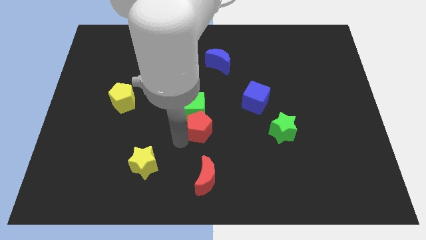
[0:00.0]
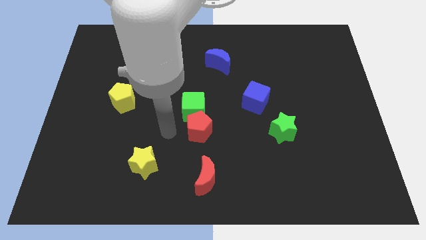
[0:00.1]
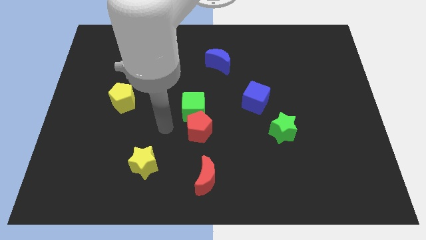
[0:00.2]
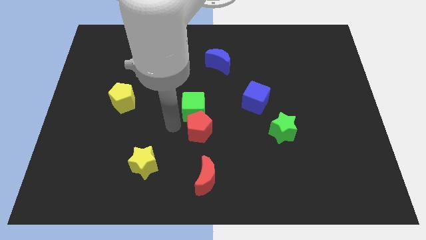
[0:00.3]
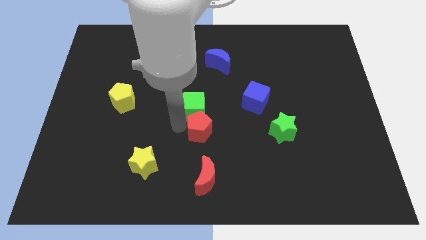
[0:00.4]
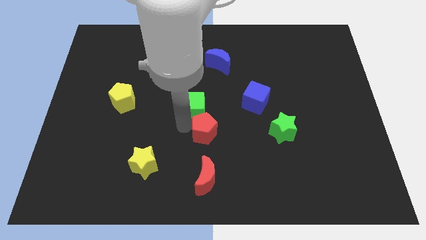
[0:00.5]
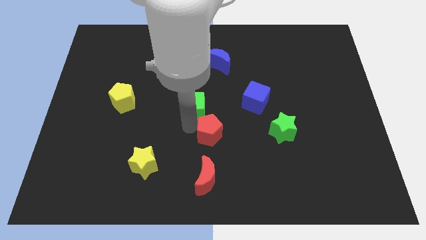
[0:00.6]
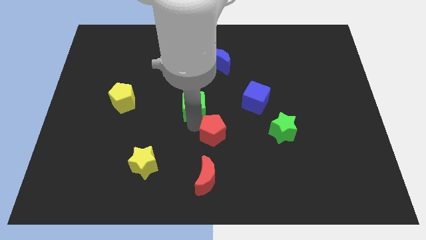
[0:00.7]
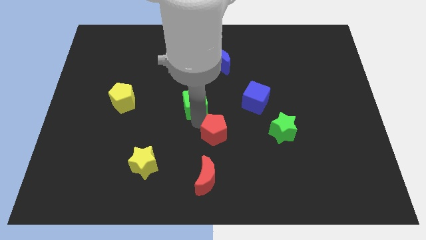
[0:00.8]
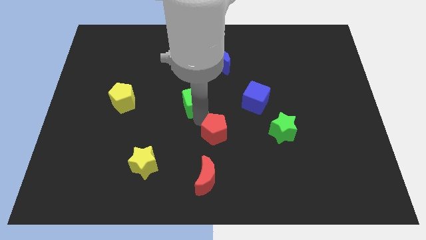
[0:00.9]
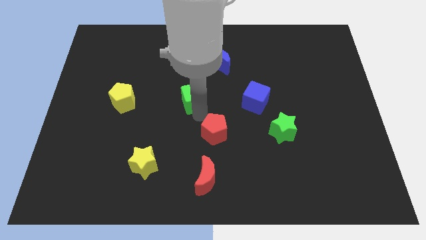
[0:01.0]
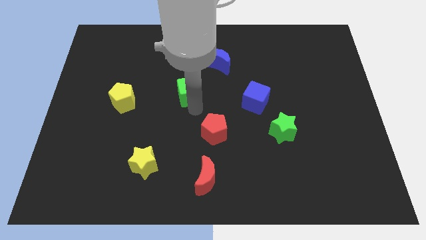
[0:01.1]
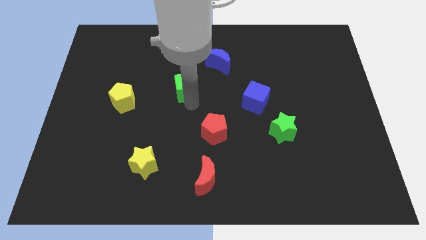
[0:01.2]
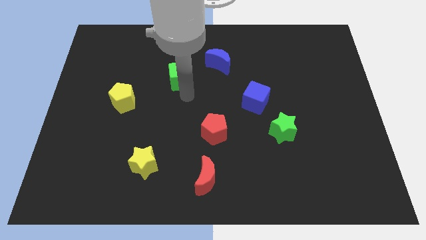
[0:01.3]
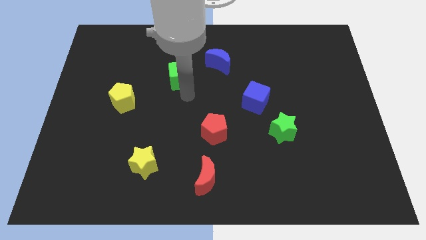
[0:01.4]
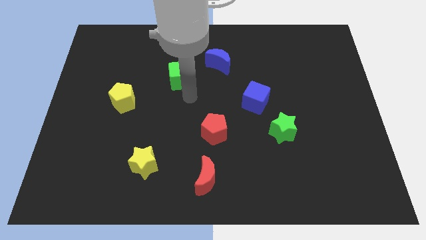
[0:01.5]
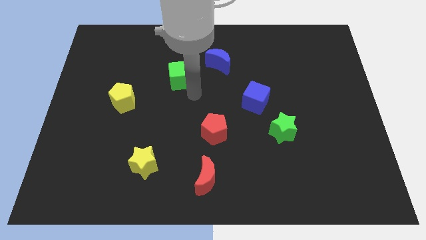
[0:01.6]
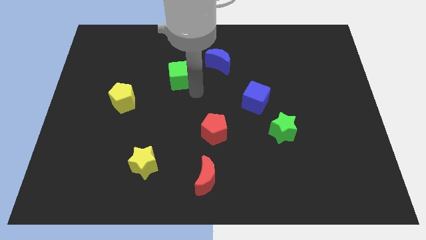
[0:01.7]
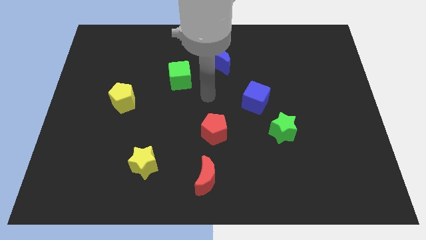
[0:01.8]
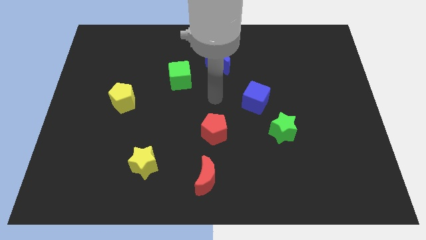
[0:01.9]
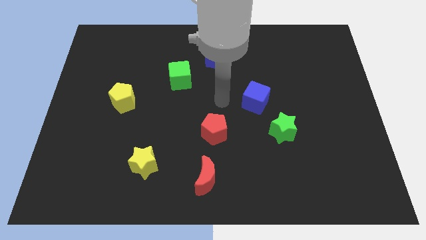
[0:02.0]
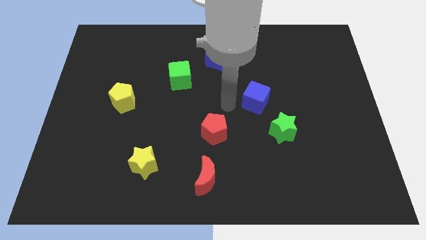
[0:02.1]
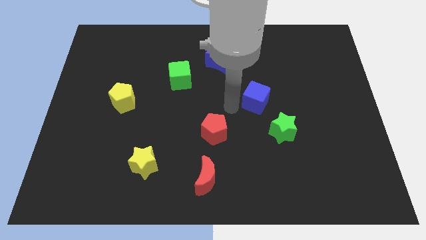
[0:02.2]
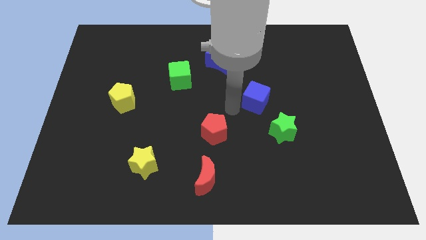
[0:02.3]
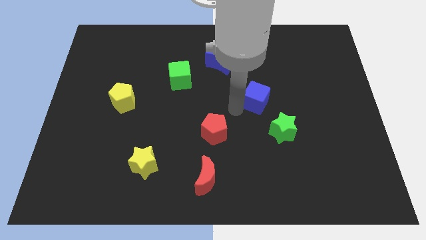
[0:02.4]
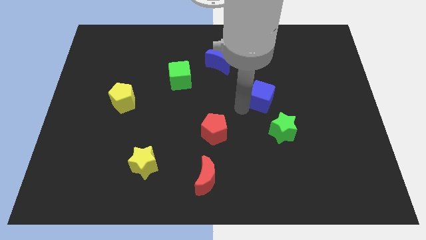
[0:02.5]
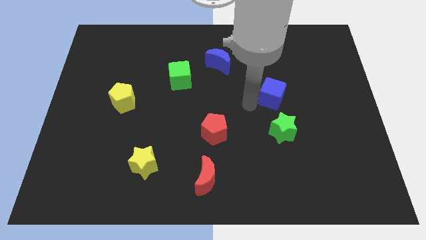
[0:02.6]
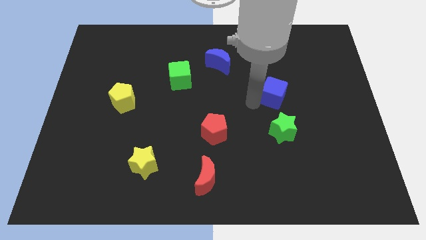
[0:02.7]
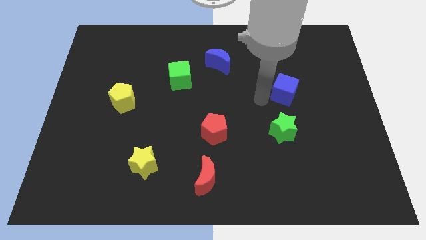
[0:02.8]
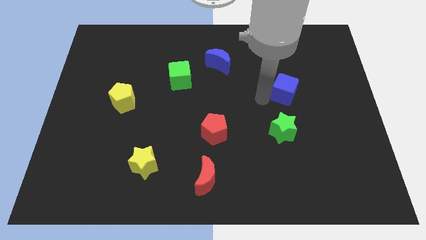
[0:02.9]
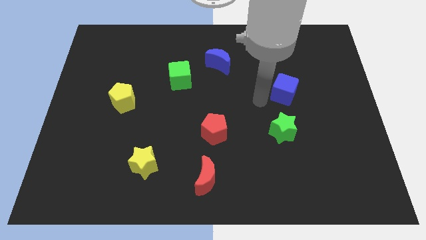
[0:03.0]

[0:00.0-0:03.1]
push green cube to the left of blue crescent

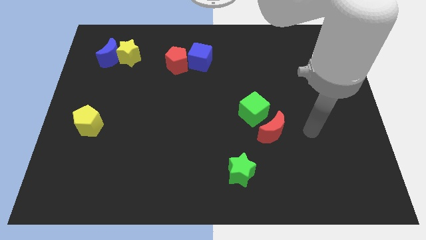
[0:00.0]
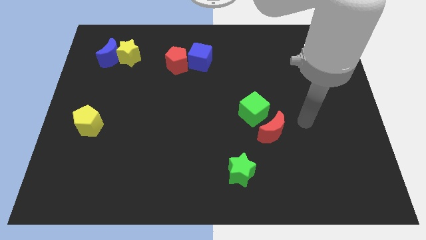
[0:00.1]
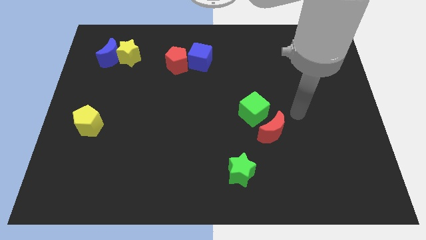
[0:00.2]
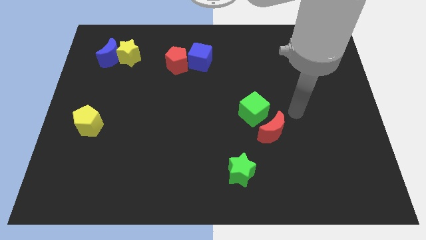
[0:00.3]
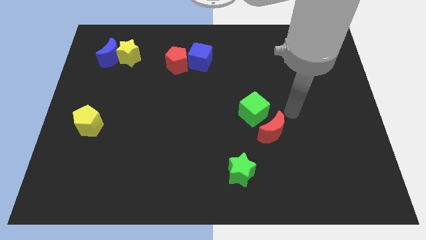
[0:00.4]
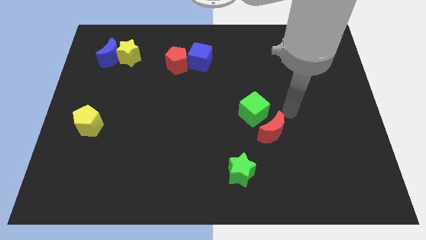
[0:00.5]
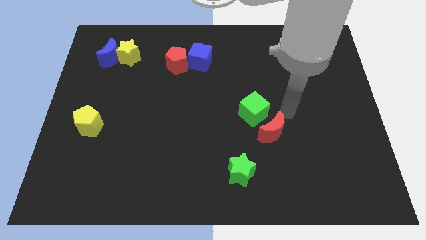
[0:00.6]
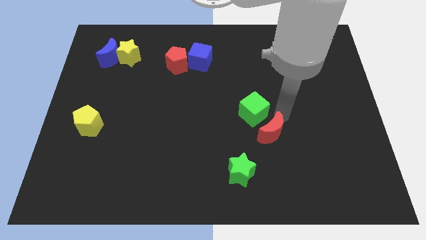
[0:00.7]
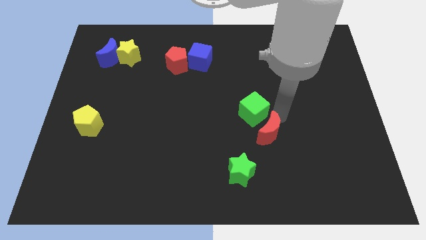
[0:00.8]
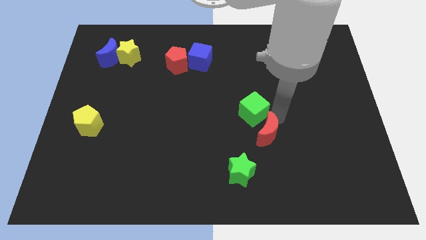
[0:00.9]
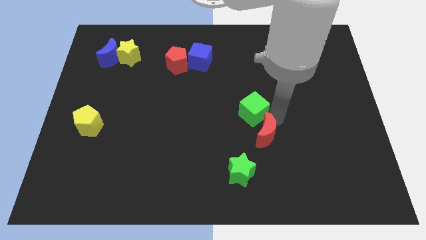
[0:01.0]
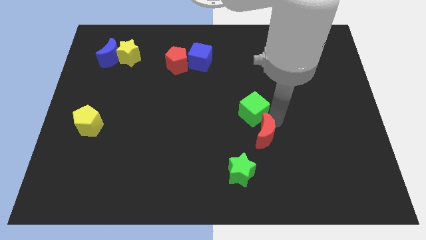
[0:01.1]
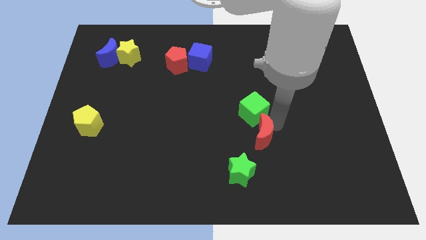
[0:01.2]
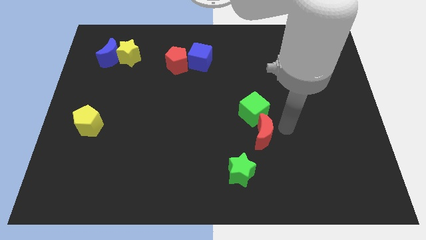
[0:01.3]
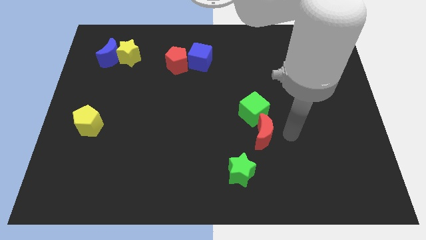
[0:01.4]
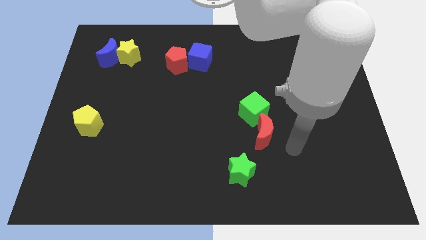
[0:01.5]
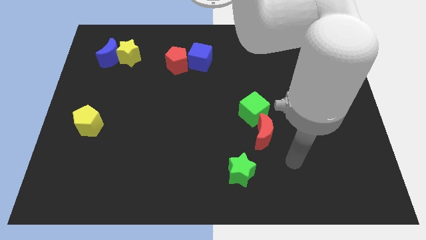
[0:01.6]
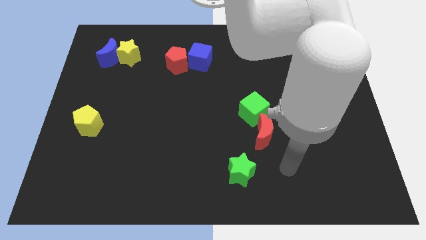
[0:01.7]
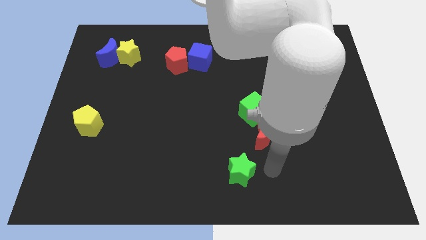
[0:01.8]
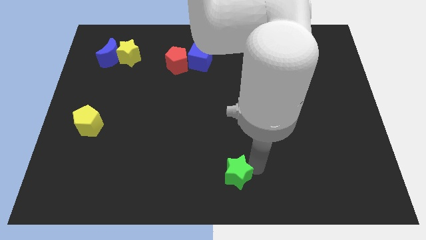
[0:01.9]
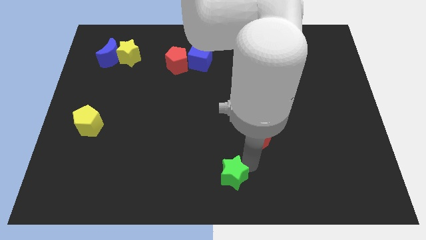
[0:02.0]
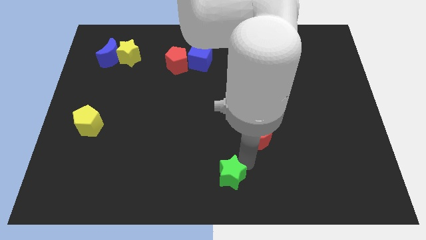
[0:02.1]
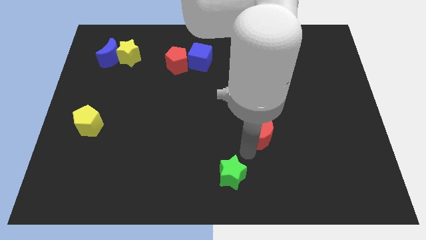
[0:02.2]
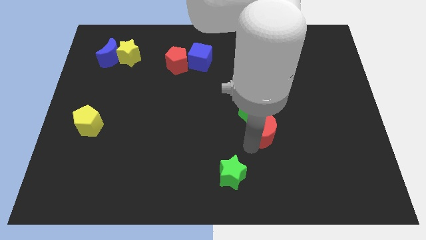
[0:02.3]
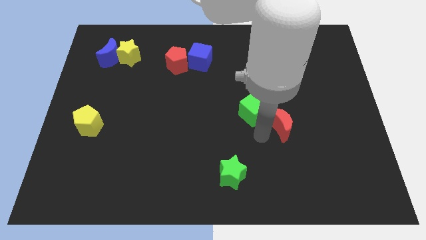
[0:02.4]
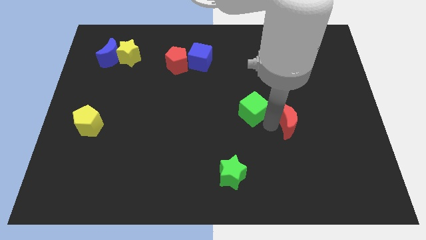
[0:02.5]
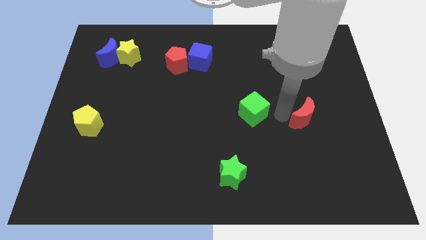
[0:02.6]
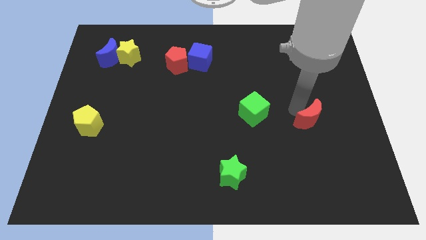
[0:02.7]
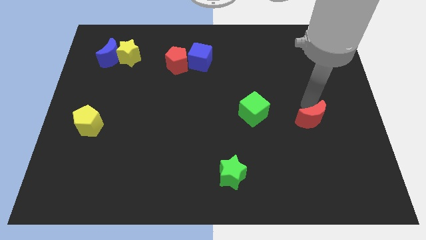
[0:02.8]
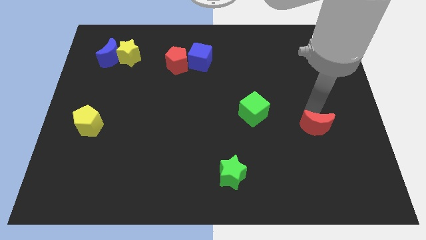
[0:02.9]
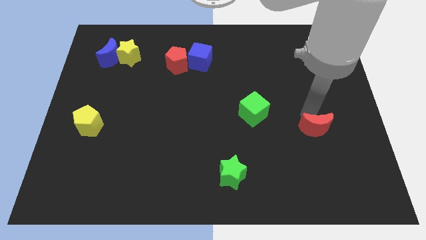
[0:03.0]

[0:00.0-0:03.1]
move red moon closer to the green cube

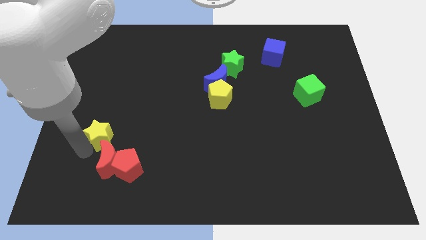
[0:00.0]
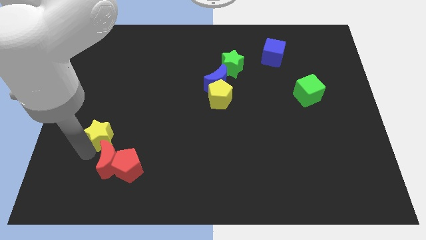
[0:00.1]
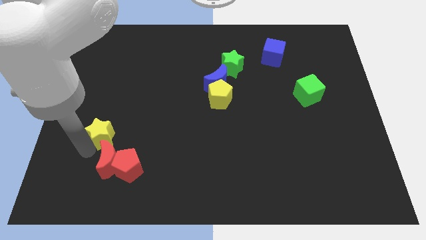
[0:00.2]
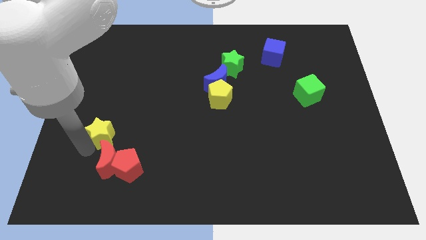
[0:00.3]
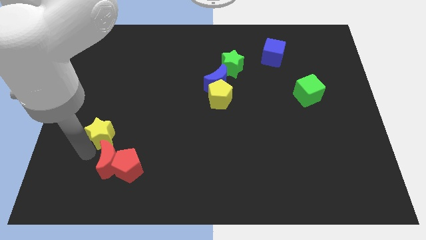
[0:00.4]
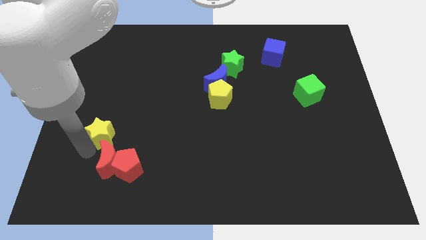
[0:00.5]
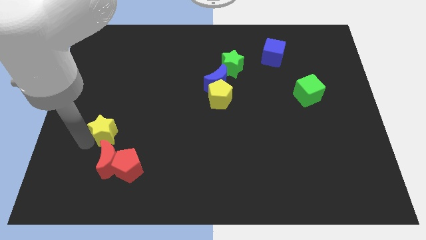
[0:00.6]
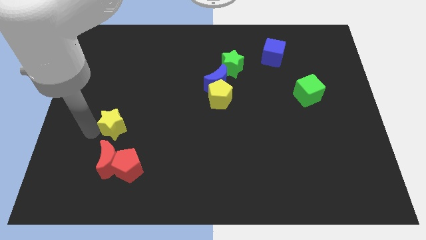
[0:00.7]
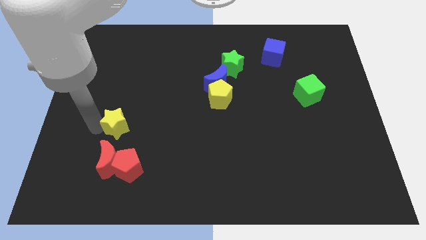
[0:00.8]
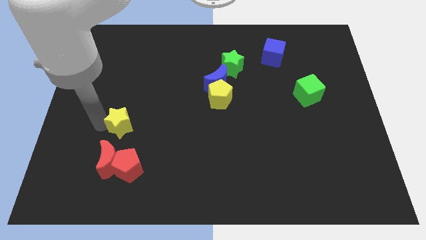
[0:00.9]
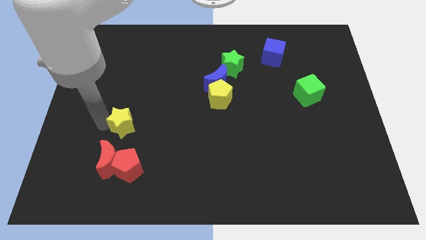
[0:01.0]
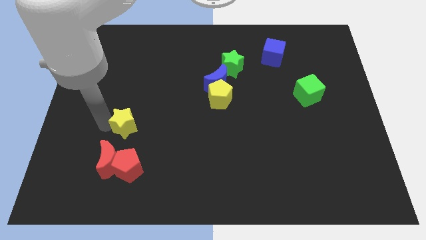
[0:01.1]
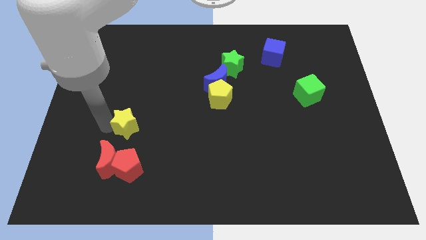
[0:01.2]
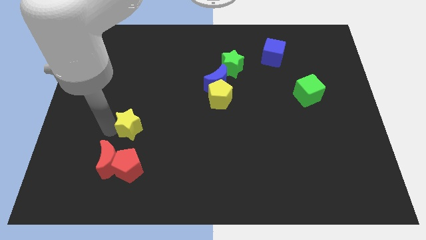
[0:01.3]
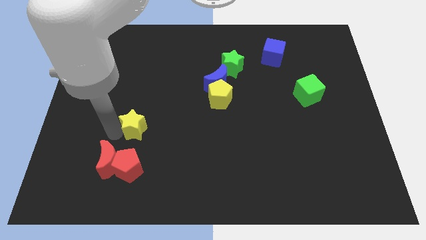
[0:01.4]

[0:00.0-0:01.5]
place the yellow star above the red blocks

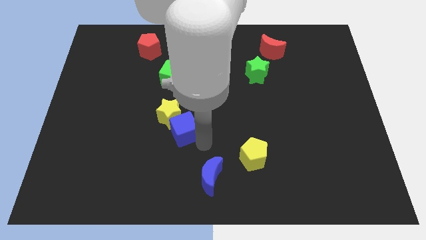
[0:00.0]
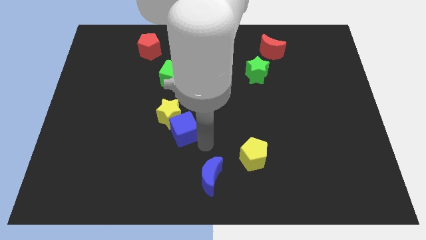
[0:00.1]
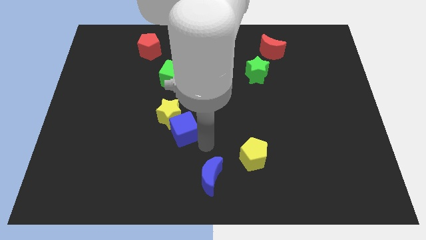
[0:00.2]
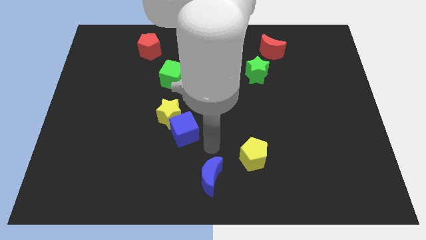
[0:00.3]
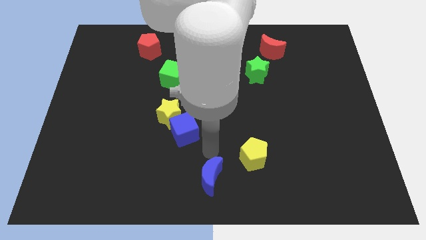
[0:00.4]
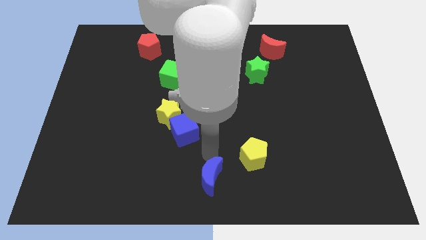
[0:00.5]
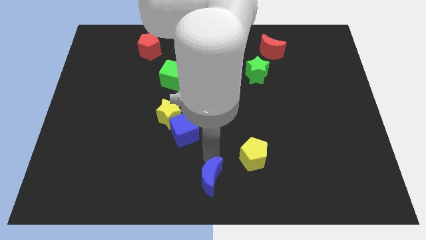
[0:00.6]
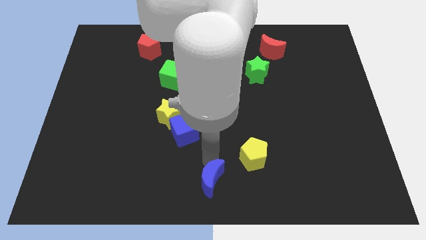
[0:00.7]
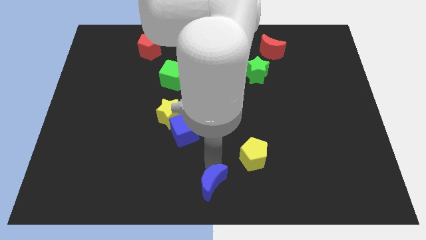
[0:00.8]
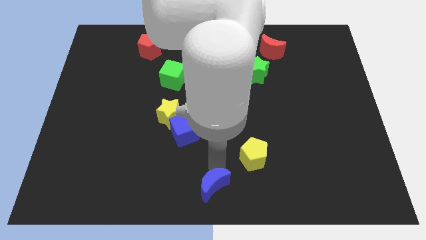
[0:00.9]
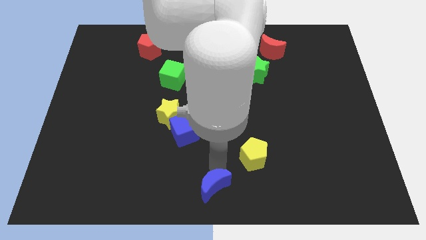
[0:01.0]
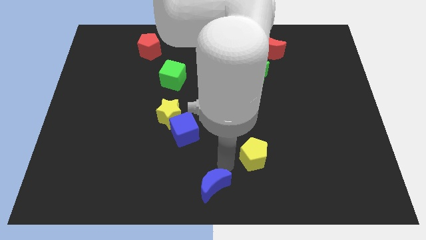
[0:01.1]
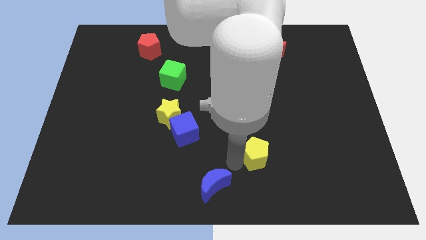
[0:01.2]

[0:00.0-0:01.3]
place the blue crescent at the bottom center of the board
